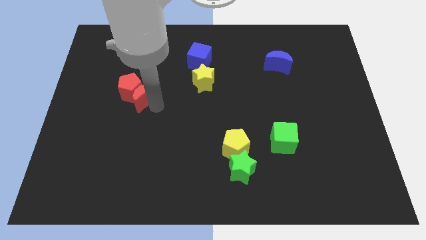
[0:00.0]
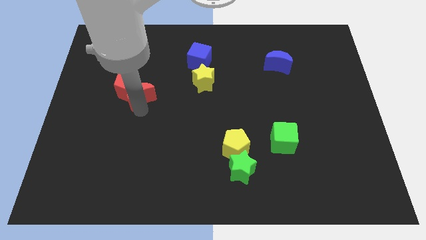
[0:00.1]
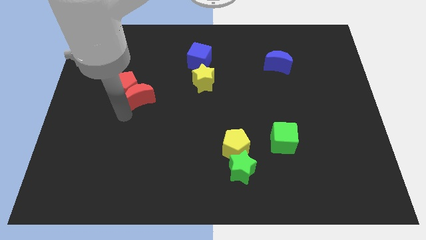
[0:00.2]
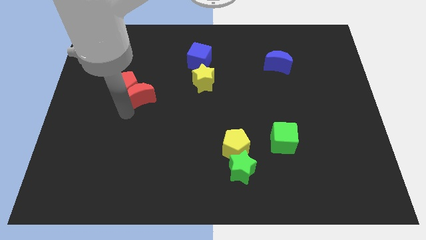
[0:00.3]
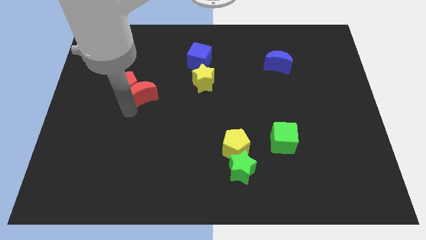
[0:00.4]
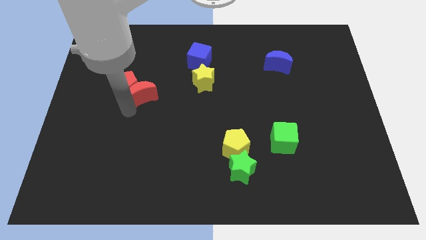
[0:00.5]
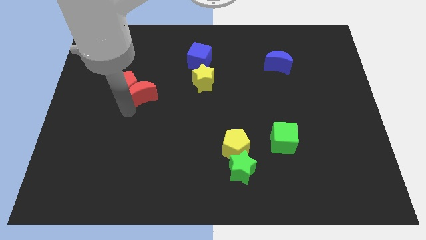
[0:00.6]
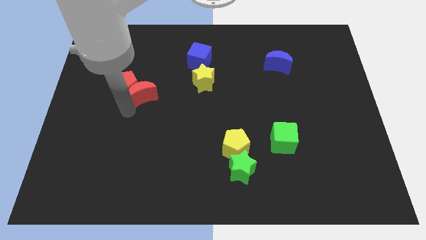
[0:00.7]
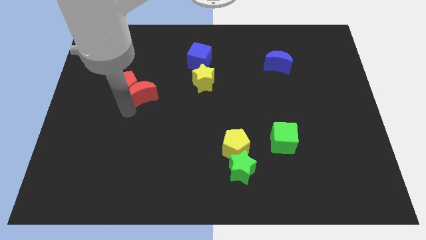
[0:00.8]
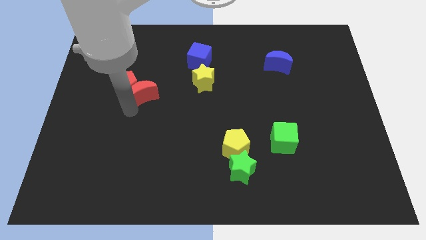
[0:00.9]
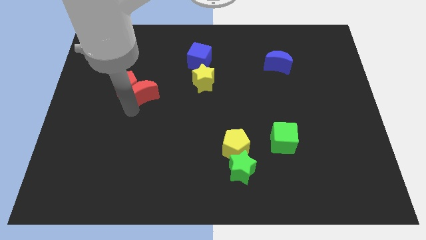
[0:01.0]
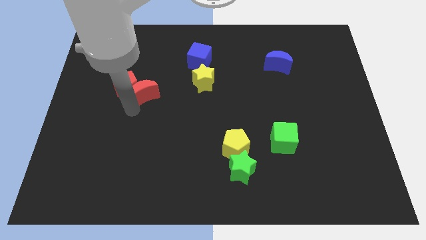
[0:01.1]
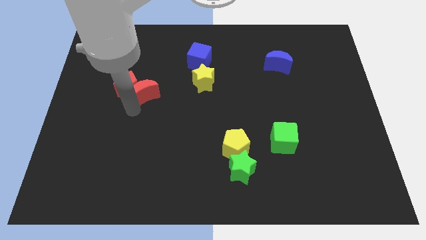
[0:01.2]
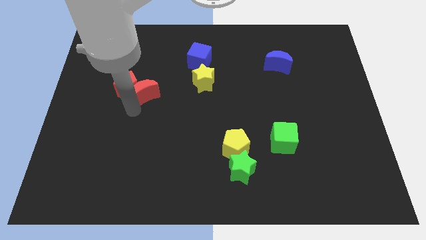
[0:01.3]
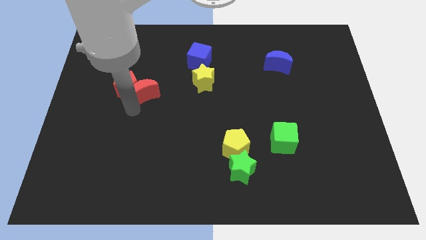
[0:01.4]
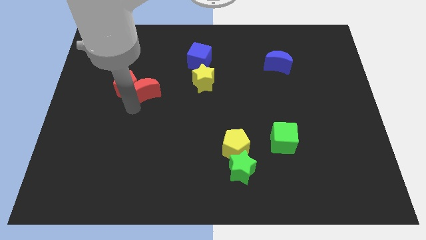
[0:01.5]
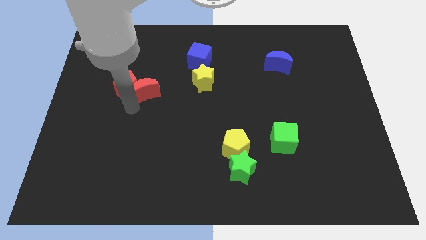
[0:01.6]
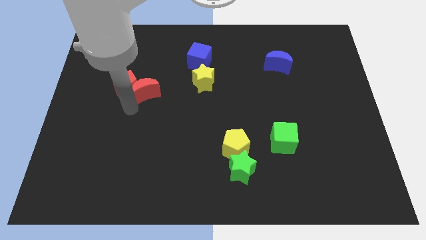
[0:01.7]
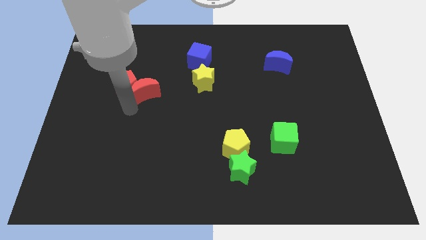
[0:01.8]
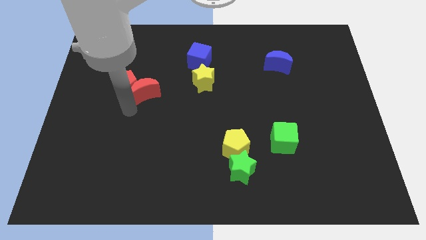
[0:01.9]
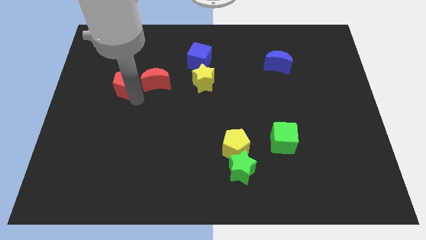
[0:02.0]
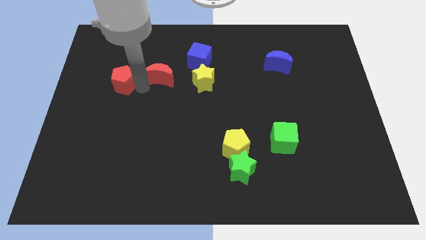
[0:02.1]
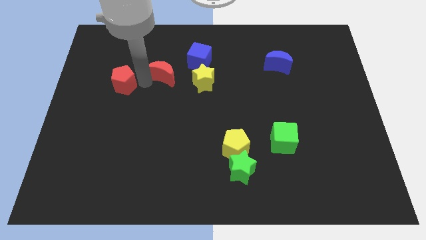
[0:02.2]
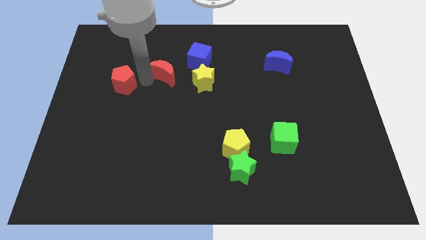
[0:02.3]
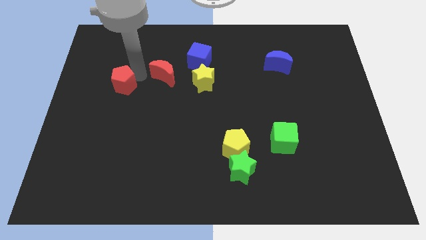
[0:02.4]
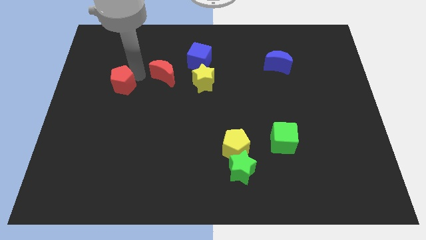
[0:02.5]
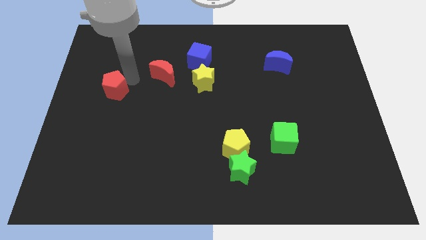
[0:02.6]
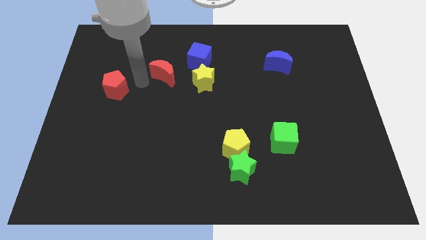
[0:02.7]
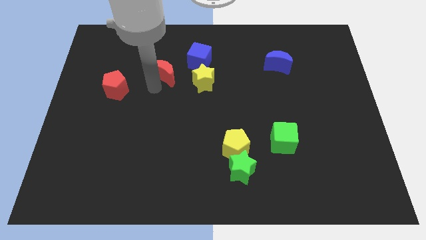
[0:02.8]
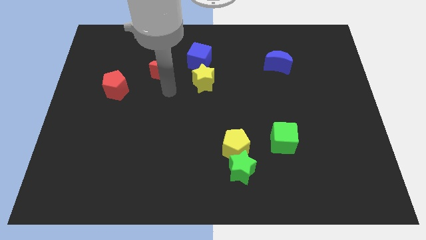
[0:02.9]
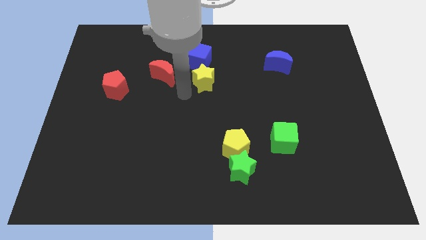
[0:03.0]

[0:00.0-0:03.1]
move the red crescent to the left of the yellow star

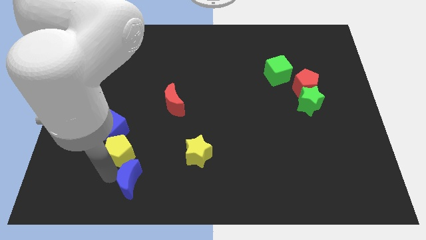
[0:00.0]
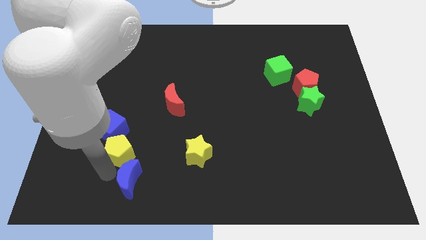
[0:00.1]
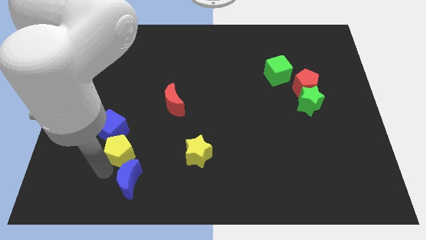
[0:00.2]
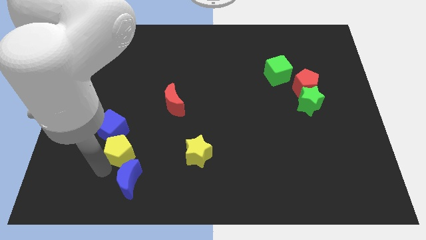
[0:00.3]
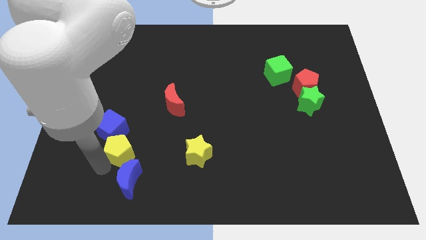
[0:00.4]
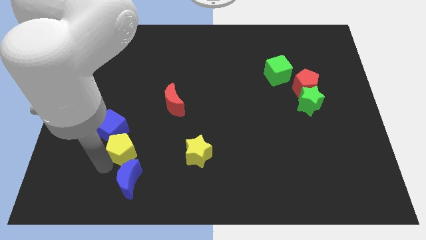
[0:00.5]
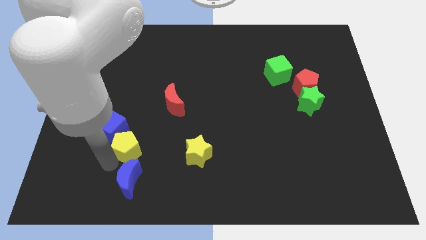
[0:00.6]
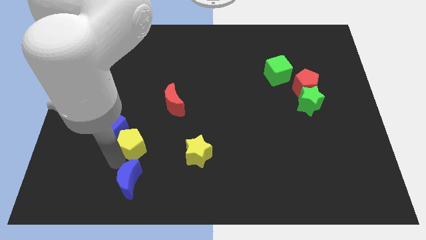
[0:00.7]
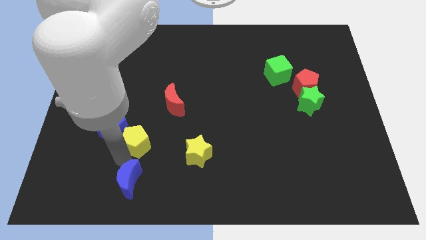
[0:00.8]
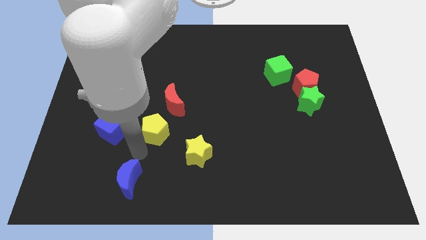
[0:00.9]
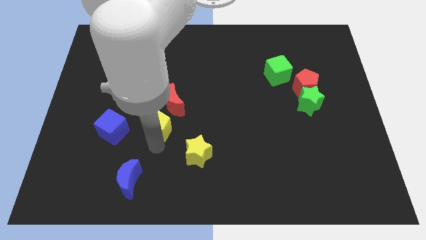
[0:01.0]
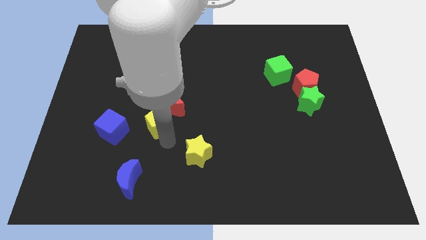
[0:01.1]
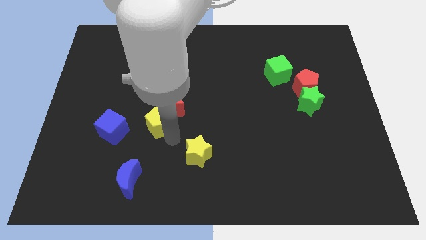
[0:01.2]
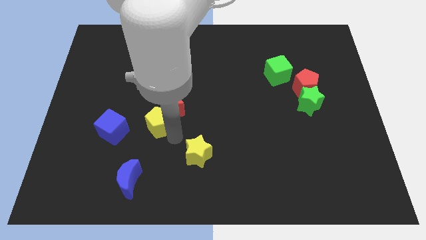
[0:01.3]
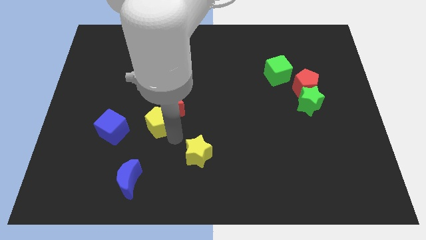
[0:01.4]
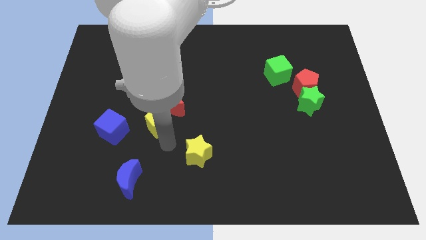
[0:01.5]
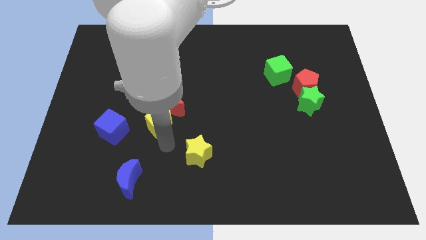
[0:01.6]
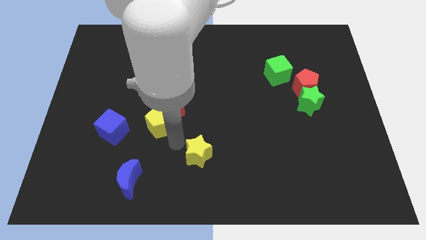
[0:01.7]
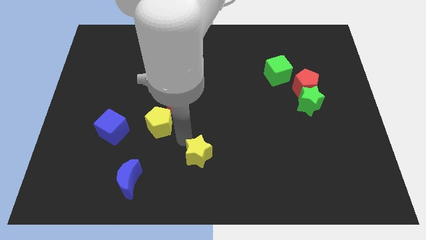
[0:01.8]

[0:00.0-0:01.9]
move yellow pentagon near red moon

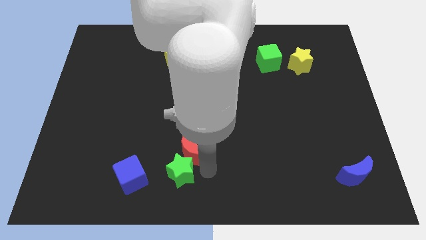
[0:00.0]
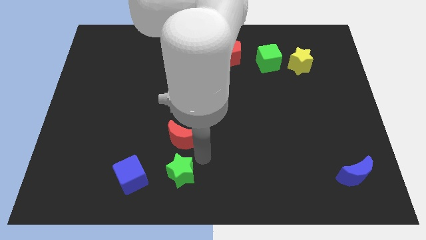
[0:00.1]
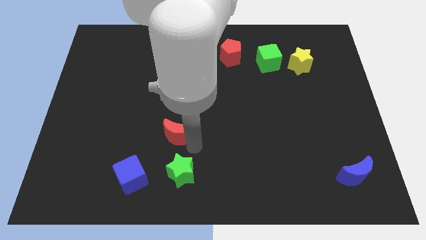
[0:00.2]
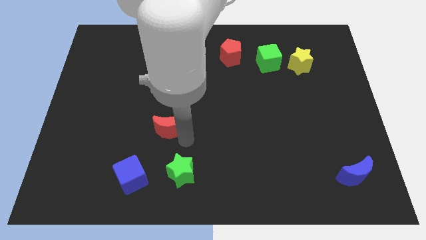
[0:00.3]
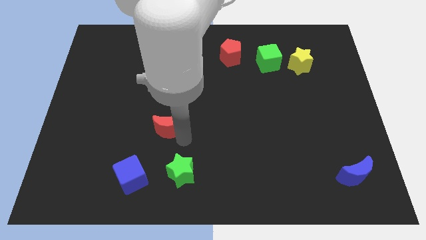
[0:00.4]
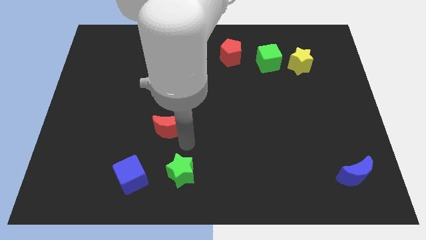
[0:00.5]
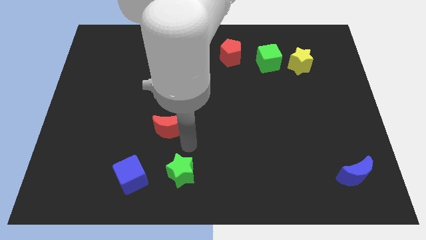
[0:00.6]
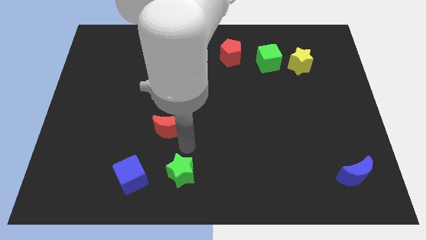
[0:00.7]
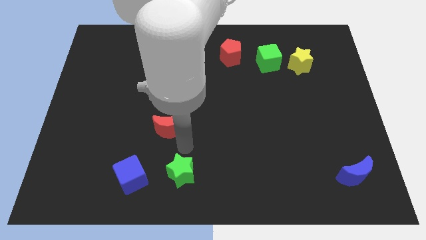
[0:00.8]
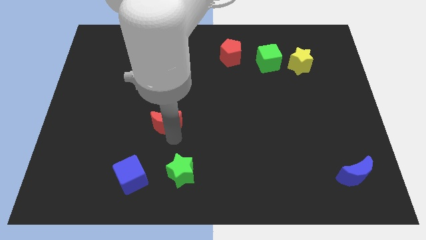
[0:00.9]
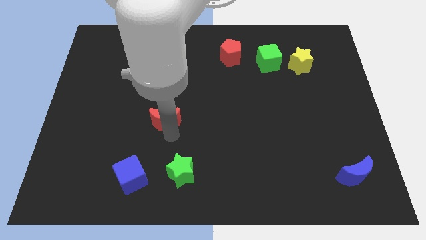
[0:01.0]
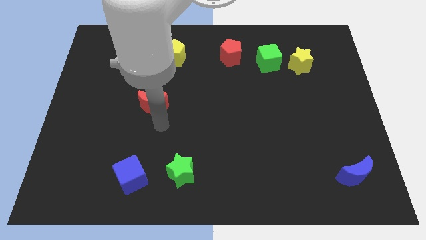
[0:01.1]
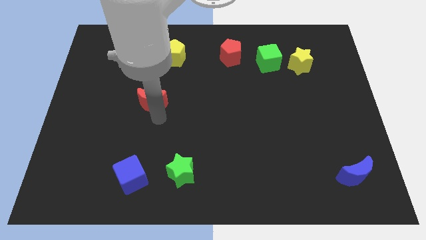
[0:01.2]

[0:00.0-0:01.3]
move the red moon towards the center

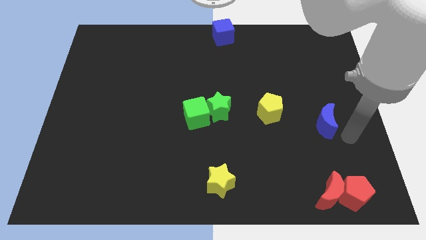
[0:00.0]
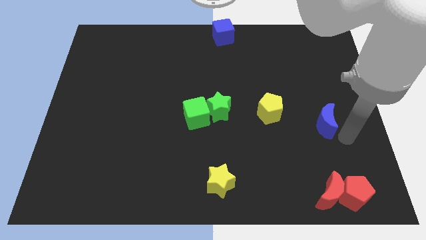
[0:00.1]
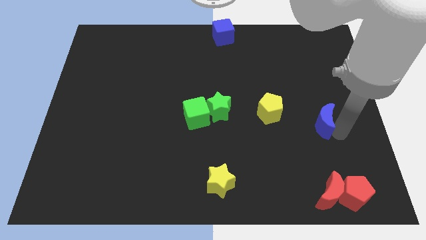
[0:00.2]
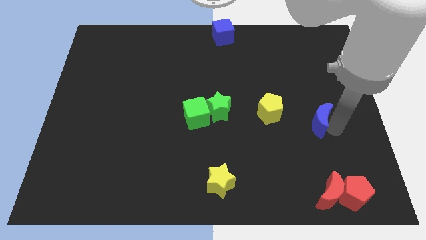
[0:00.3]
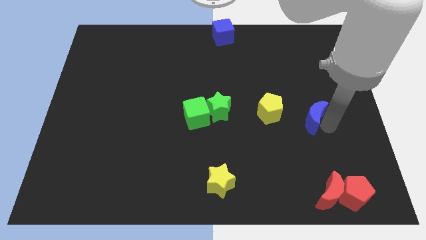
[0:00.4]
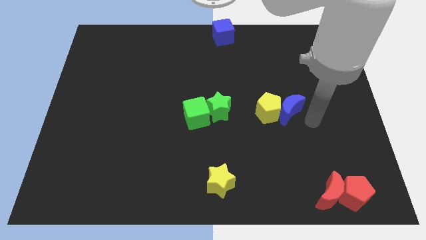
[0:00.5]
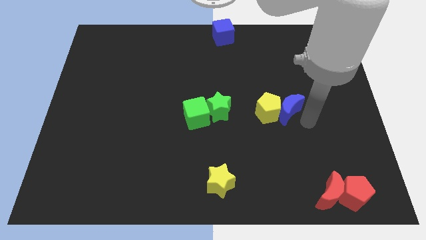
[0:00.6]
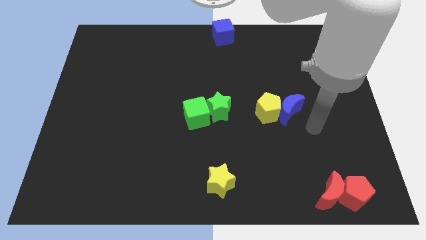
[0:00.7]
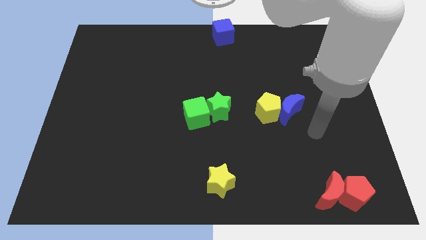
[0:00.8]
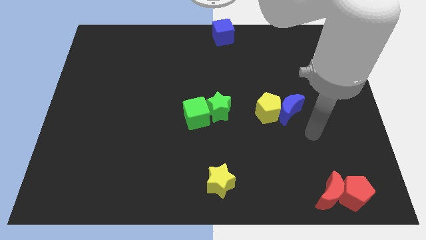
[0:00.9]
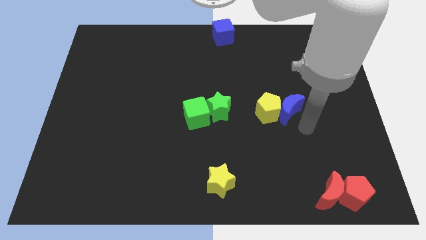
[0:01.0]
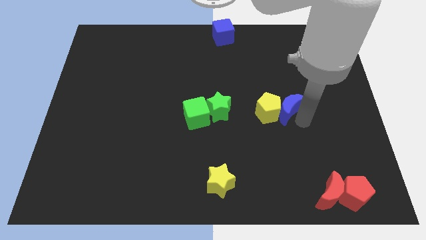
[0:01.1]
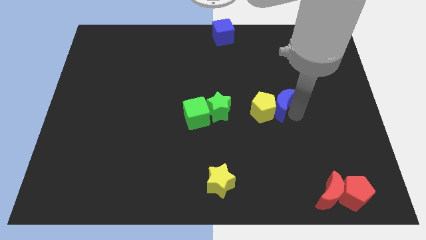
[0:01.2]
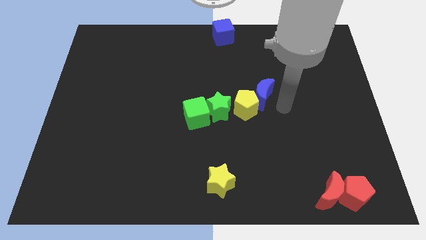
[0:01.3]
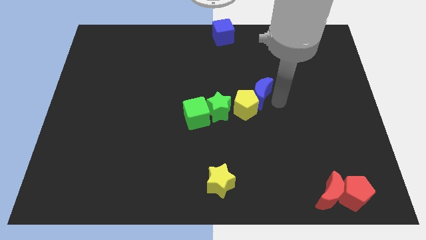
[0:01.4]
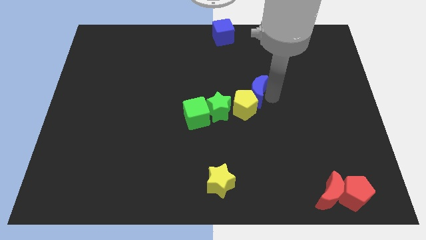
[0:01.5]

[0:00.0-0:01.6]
drag the blue moon slightly left

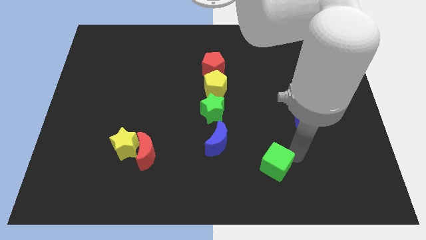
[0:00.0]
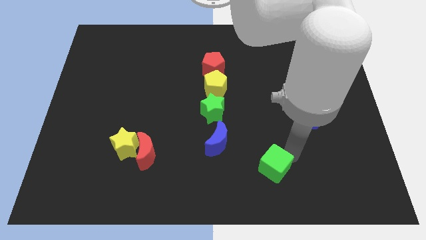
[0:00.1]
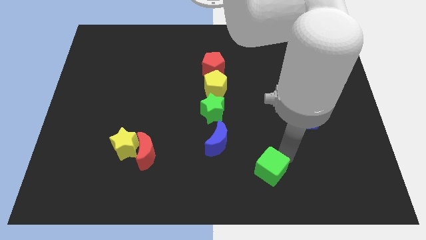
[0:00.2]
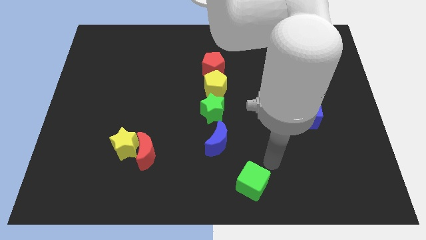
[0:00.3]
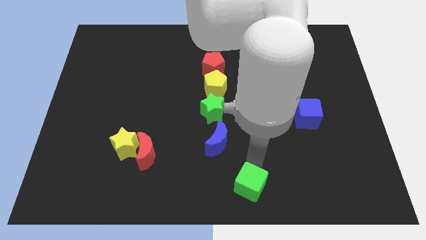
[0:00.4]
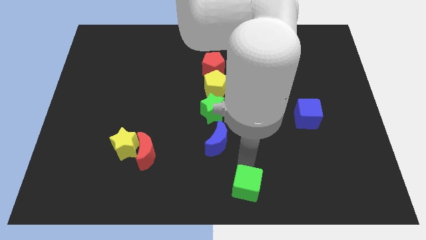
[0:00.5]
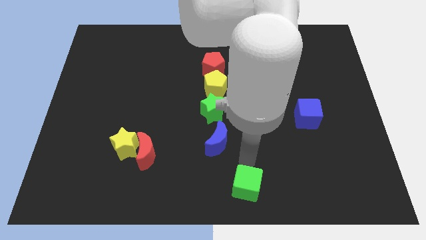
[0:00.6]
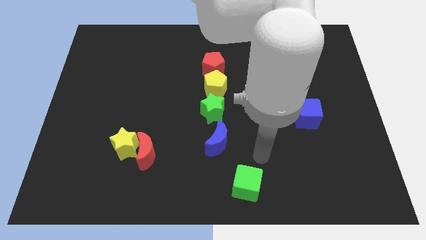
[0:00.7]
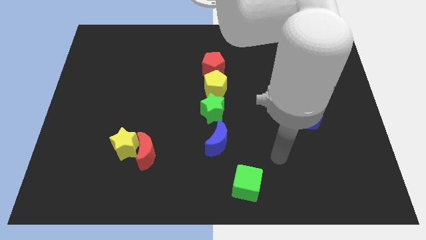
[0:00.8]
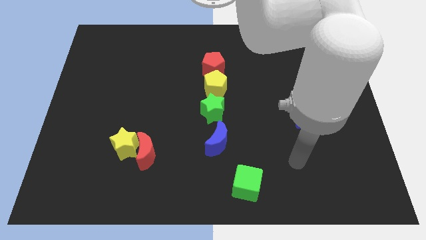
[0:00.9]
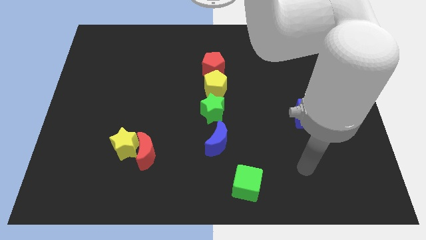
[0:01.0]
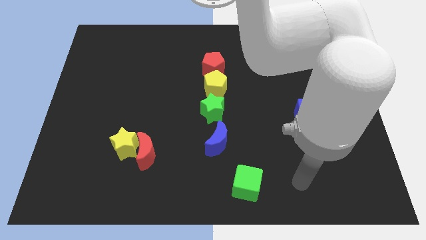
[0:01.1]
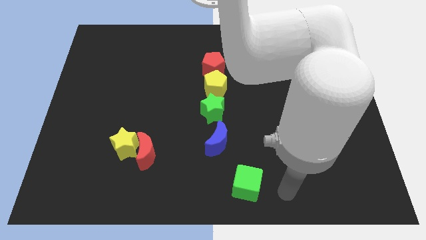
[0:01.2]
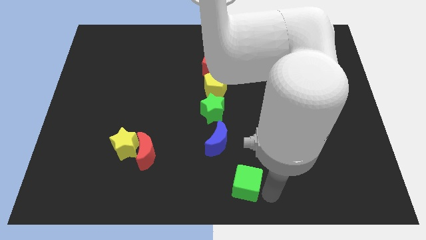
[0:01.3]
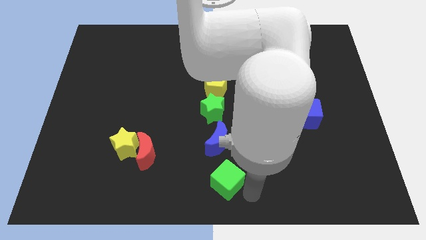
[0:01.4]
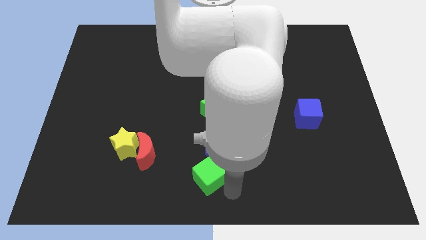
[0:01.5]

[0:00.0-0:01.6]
place the green cube at the bottom center of the board
